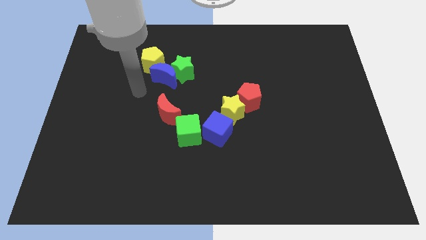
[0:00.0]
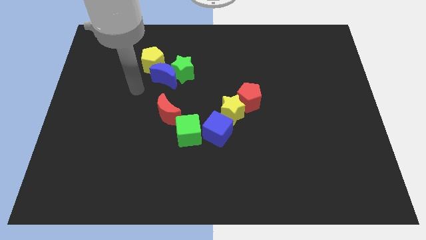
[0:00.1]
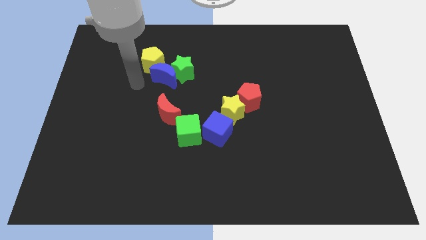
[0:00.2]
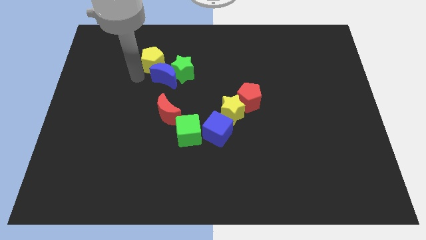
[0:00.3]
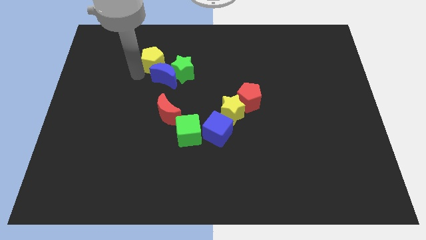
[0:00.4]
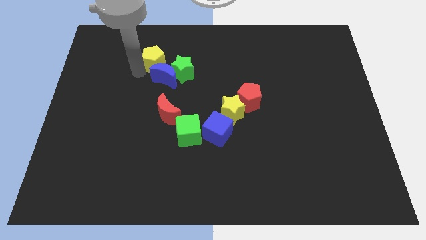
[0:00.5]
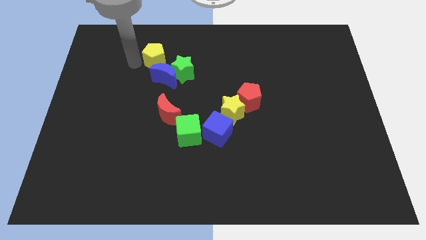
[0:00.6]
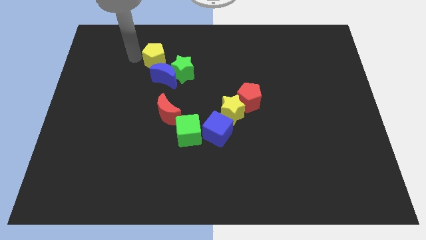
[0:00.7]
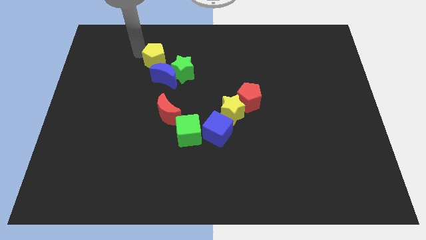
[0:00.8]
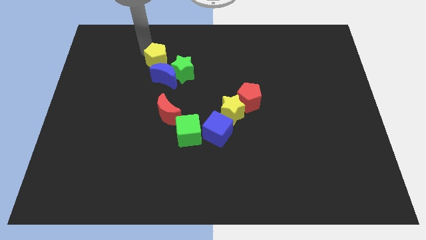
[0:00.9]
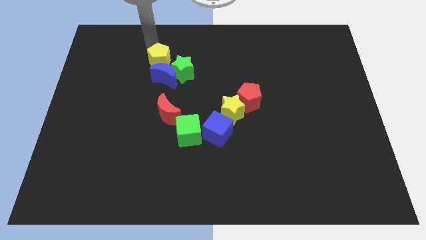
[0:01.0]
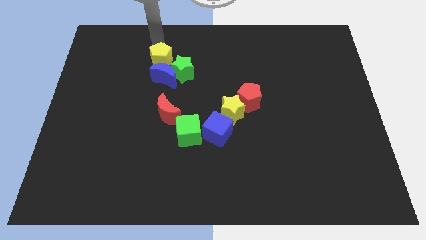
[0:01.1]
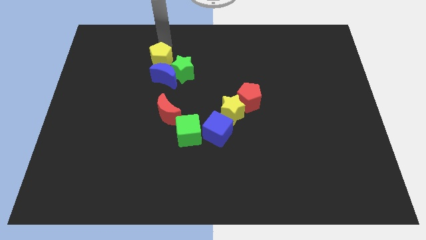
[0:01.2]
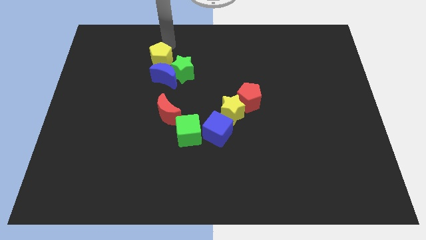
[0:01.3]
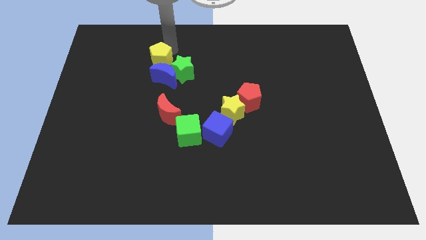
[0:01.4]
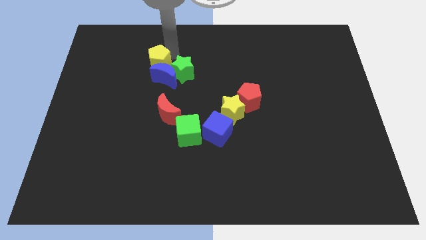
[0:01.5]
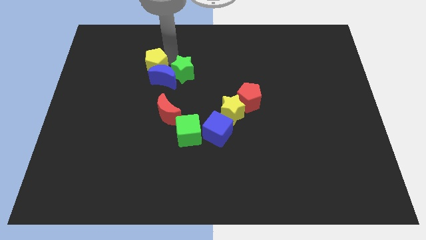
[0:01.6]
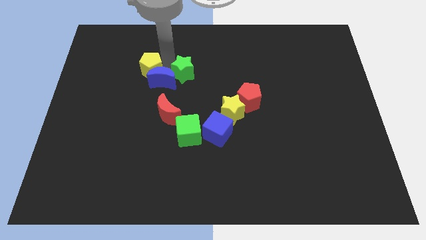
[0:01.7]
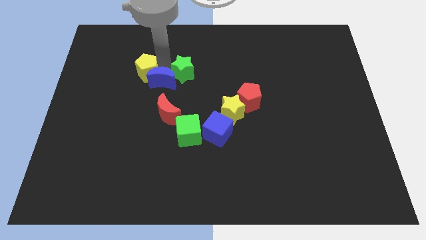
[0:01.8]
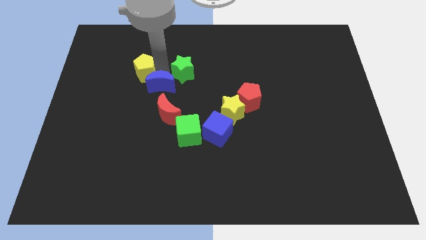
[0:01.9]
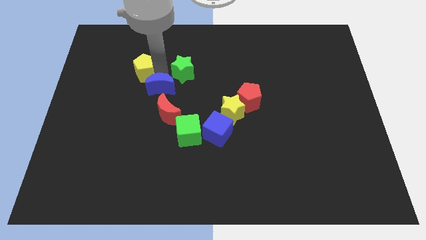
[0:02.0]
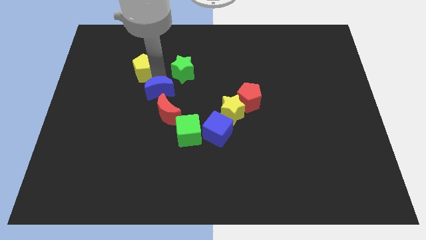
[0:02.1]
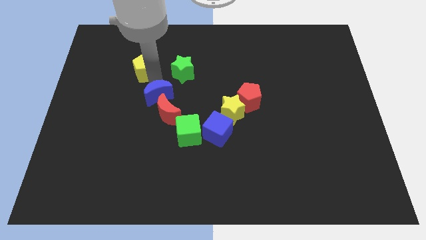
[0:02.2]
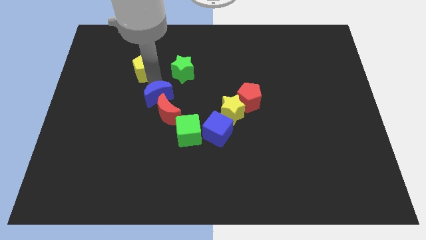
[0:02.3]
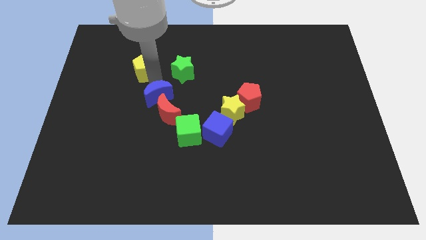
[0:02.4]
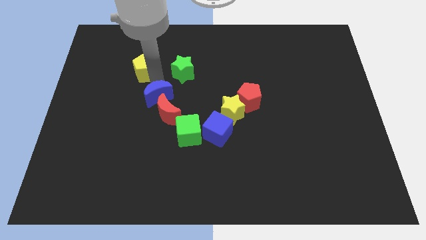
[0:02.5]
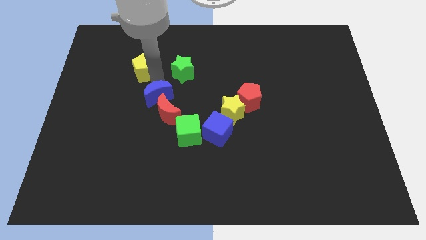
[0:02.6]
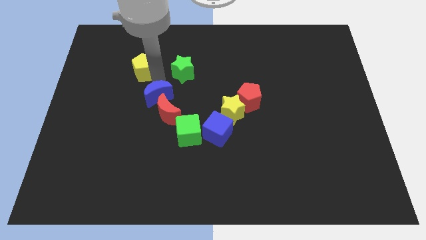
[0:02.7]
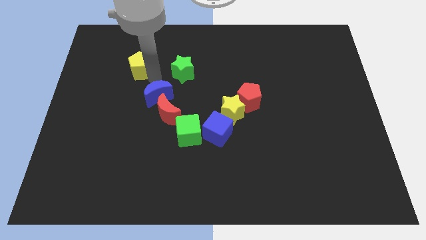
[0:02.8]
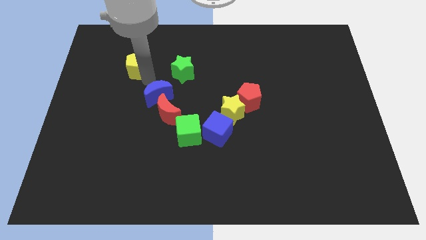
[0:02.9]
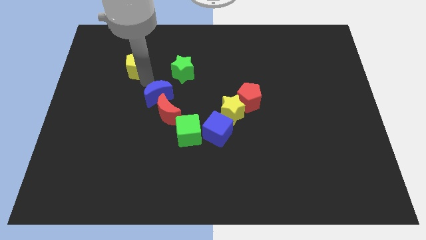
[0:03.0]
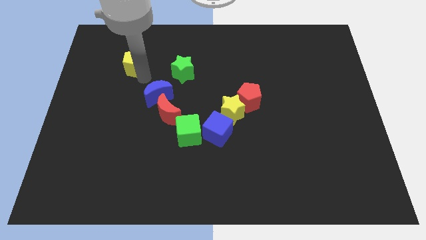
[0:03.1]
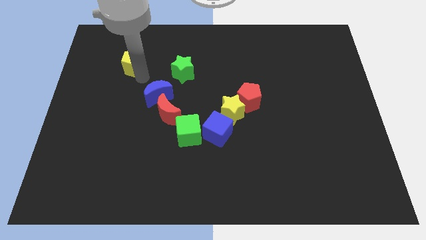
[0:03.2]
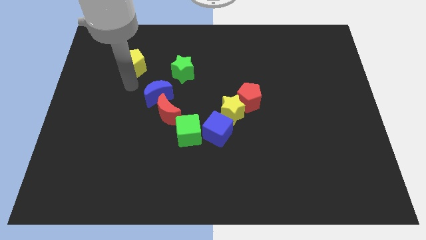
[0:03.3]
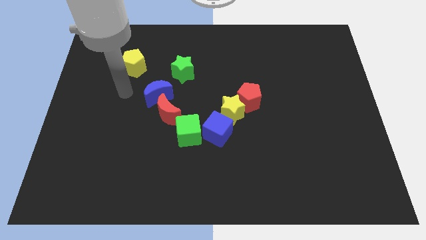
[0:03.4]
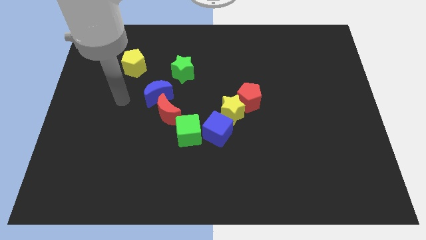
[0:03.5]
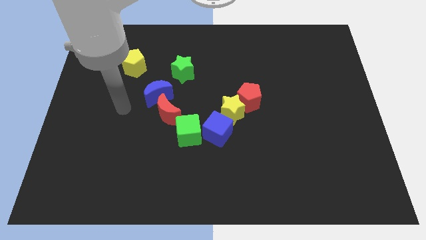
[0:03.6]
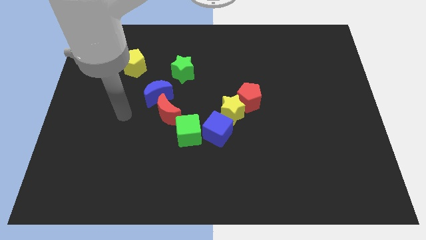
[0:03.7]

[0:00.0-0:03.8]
separate the blue moon and the yellow pentagon

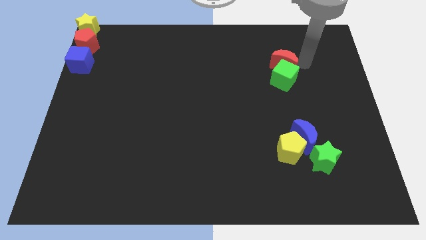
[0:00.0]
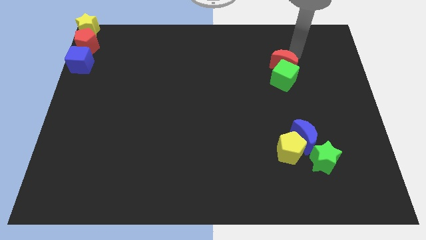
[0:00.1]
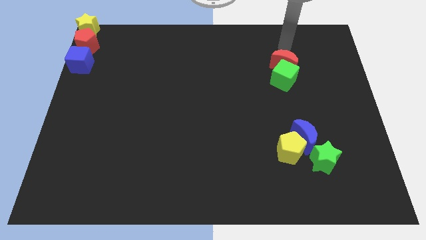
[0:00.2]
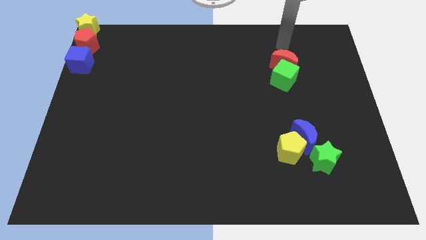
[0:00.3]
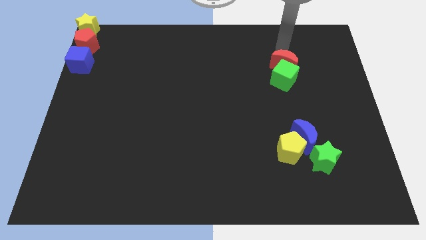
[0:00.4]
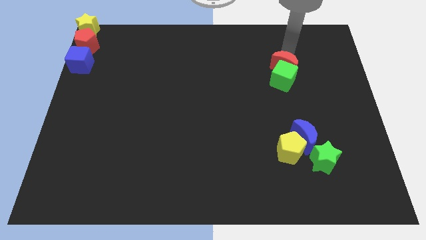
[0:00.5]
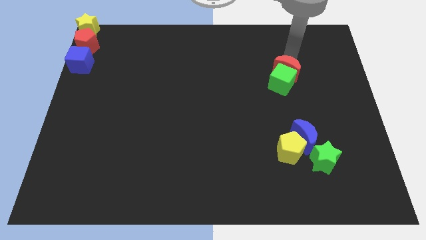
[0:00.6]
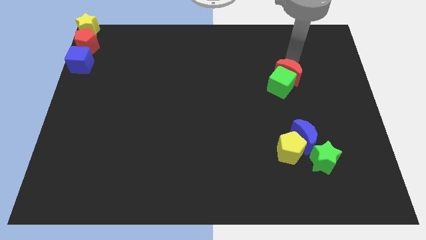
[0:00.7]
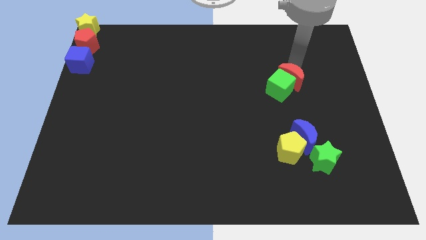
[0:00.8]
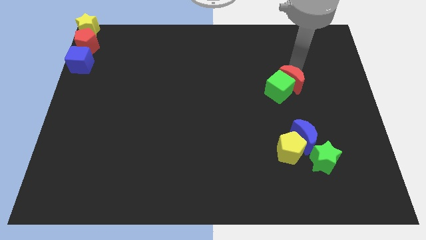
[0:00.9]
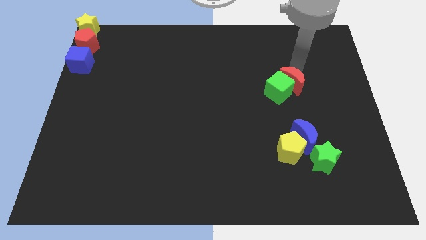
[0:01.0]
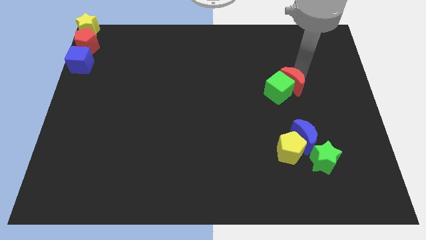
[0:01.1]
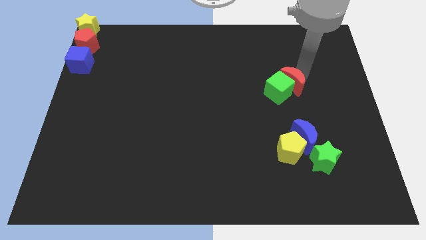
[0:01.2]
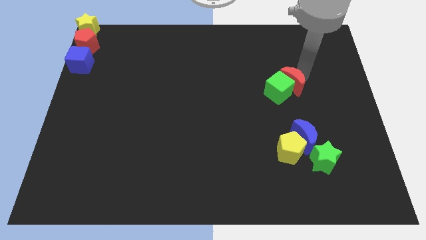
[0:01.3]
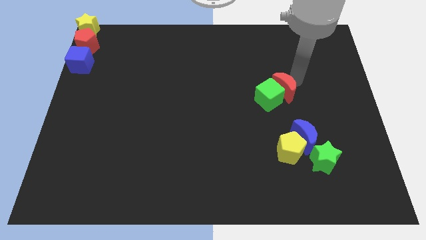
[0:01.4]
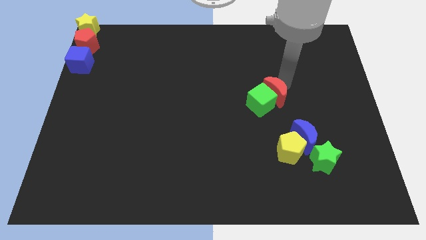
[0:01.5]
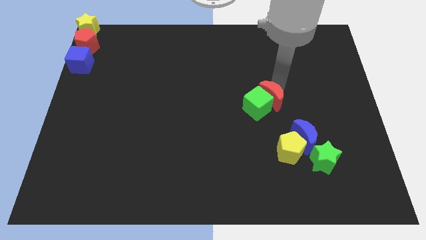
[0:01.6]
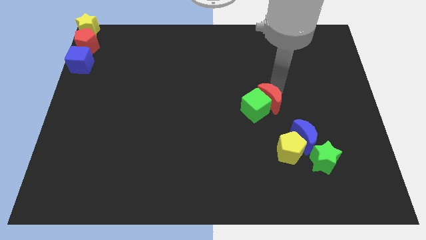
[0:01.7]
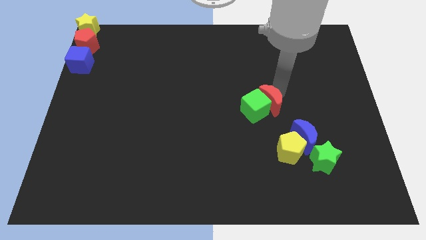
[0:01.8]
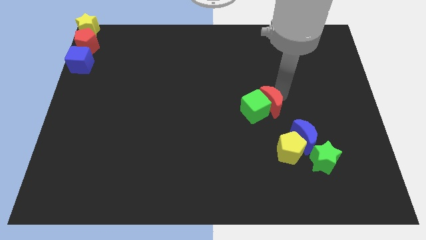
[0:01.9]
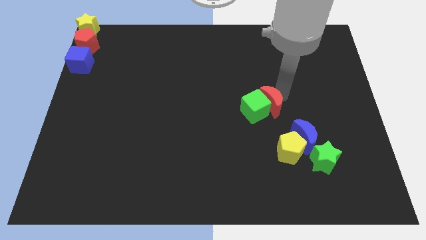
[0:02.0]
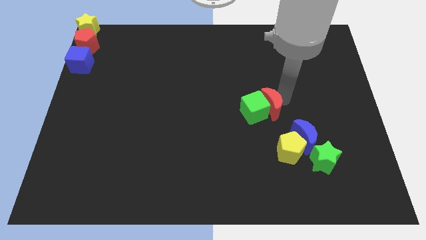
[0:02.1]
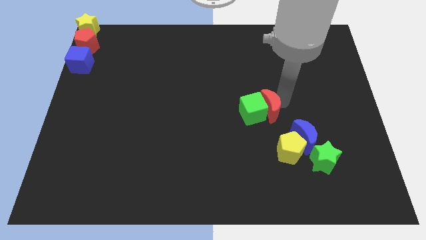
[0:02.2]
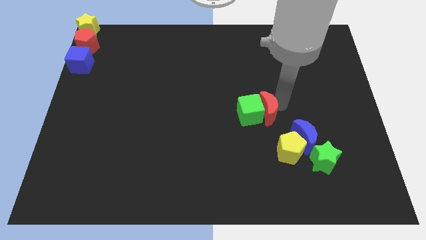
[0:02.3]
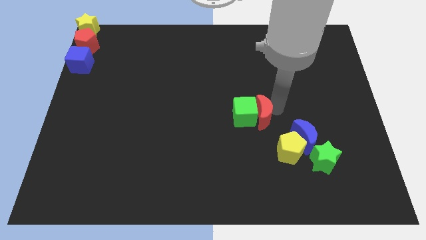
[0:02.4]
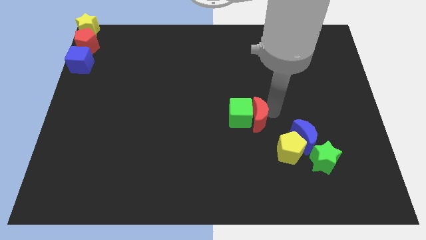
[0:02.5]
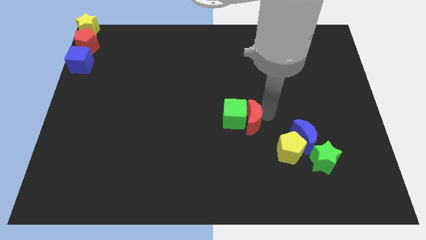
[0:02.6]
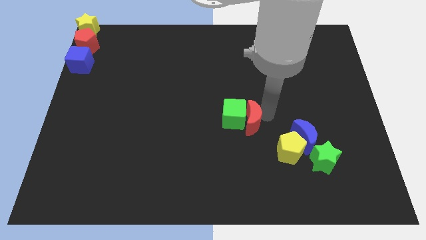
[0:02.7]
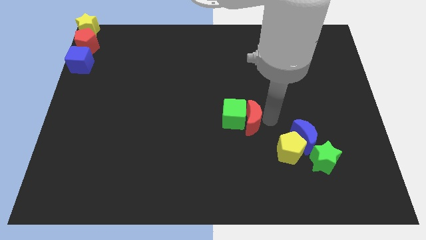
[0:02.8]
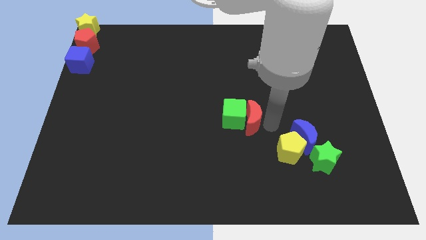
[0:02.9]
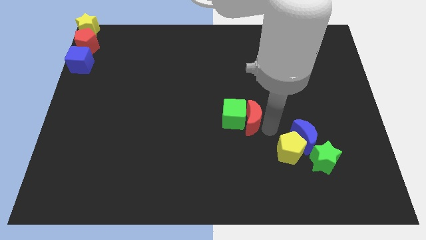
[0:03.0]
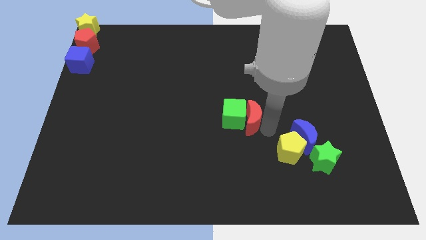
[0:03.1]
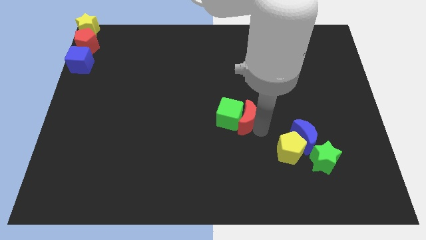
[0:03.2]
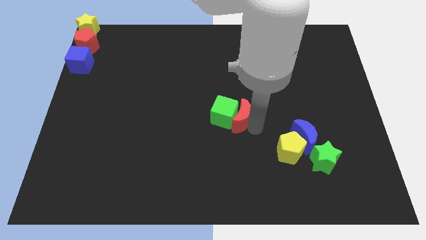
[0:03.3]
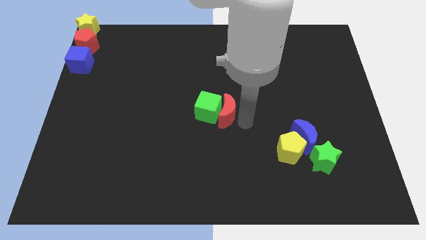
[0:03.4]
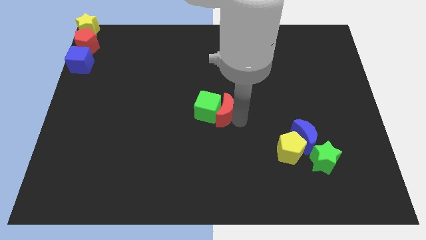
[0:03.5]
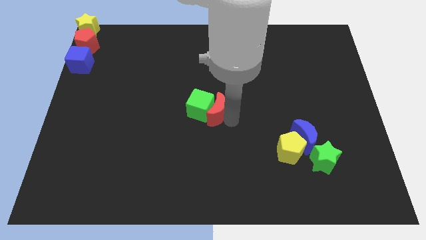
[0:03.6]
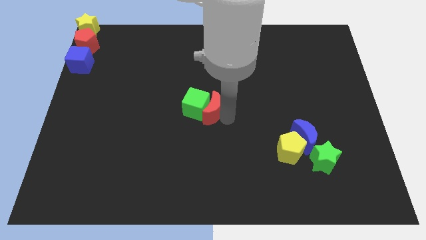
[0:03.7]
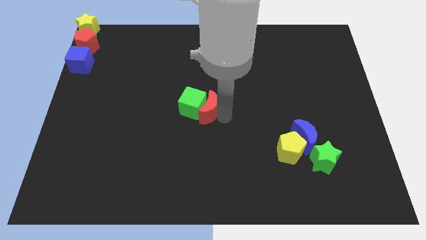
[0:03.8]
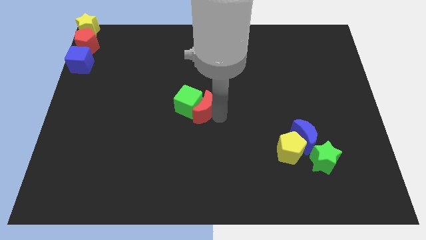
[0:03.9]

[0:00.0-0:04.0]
move the red moon into the green cube

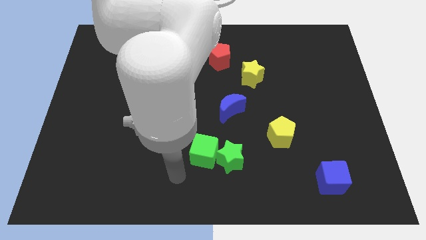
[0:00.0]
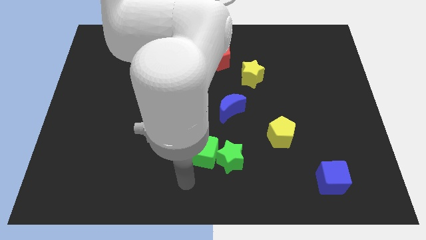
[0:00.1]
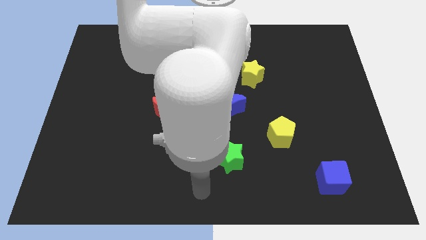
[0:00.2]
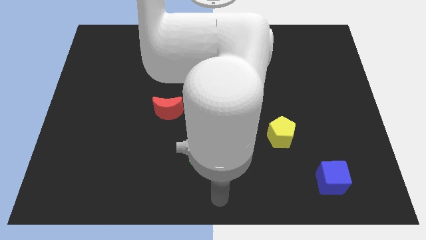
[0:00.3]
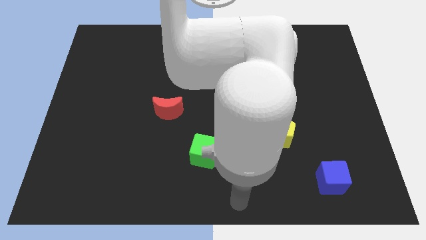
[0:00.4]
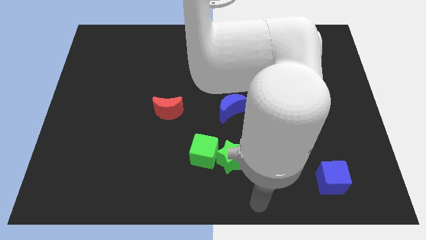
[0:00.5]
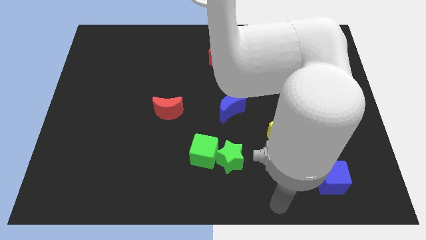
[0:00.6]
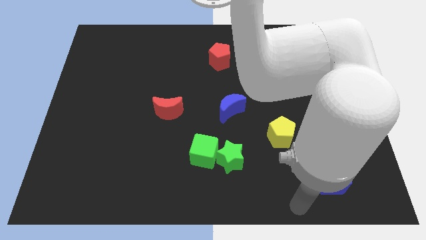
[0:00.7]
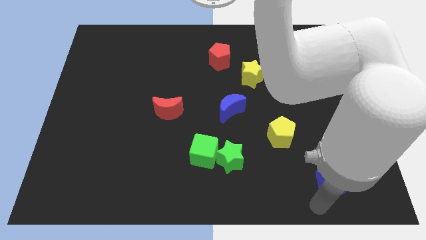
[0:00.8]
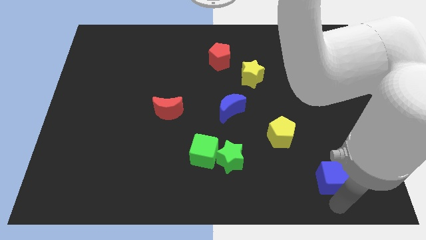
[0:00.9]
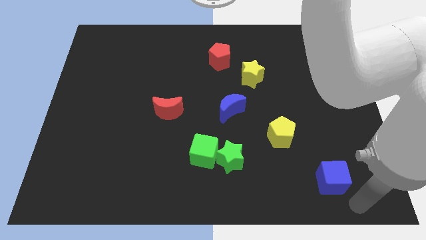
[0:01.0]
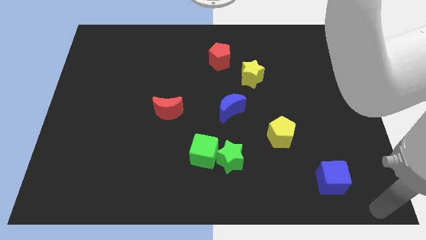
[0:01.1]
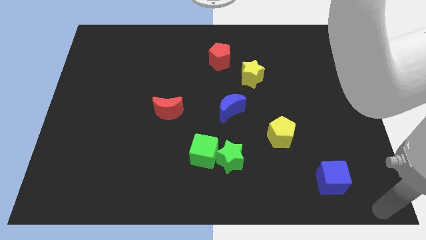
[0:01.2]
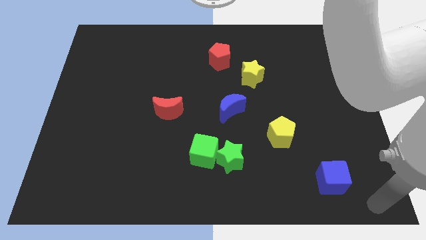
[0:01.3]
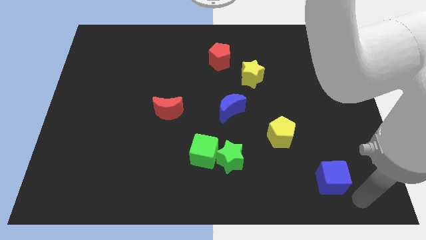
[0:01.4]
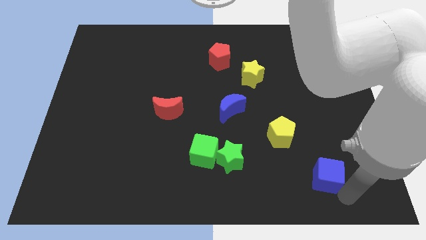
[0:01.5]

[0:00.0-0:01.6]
place the arm near the blue cube
